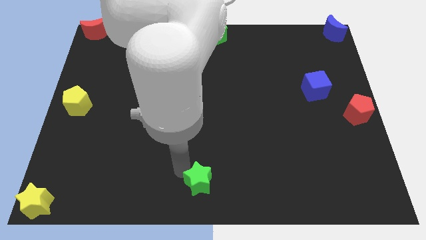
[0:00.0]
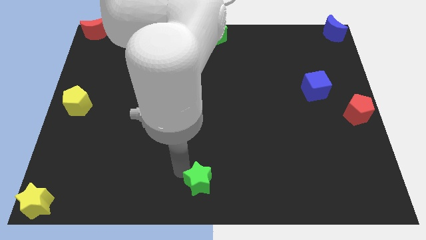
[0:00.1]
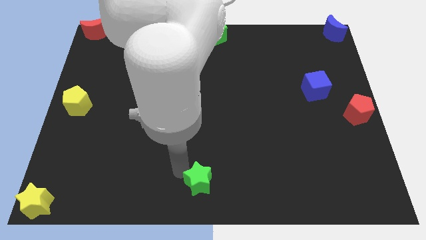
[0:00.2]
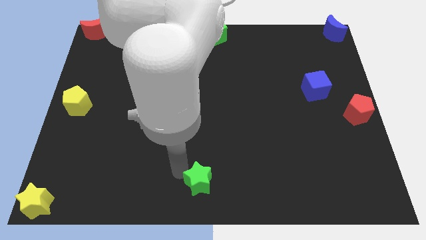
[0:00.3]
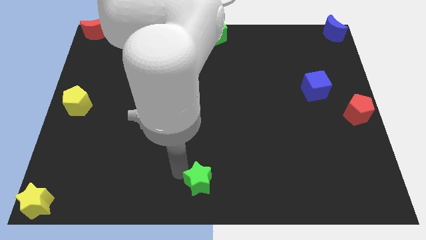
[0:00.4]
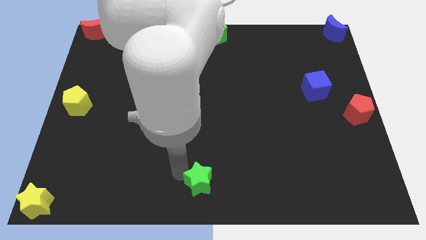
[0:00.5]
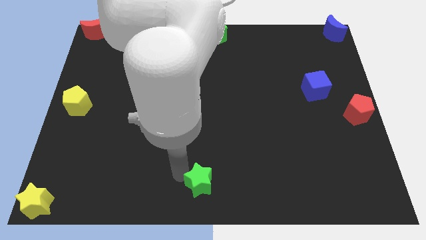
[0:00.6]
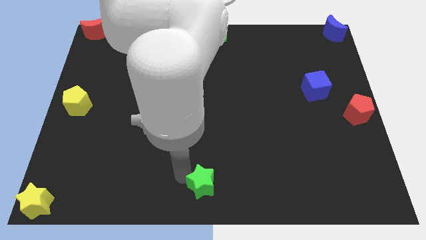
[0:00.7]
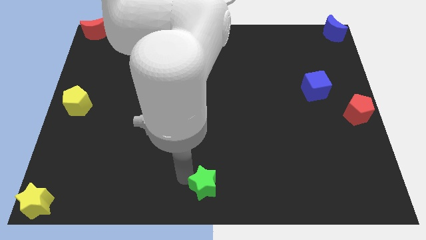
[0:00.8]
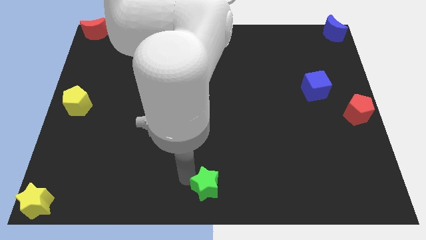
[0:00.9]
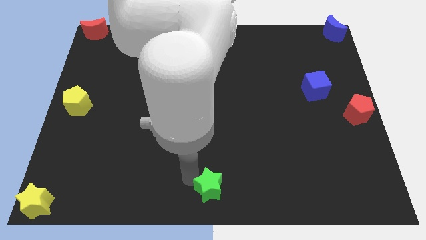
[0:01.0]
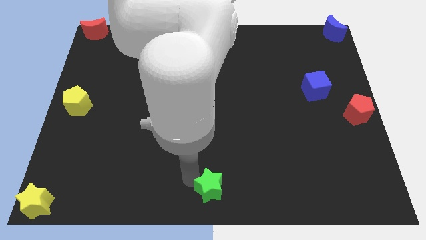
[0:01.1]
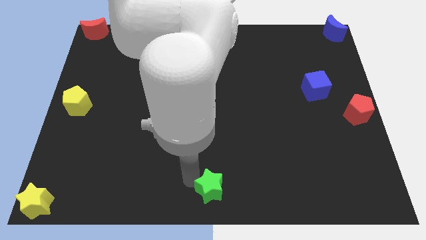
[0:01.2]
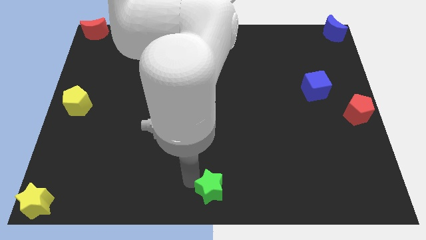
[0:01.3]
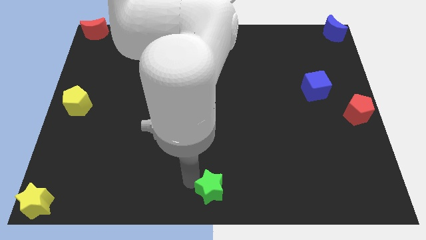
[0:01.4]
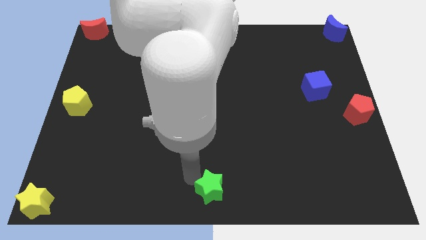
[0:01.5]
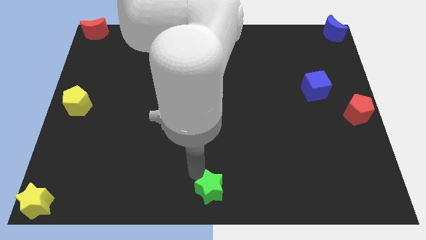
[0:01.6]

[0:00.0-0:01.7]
place the green star at the bottom center of the board

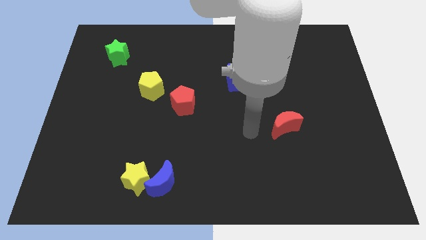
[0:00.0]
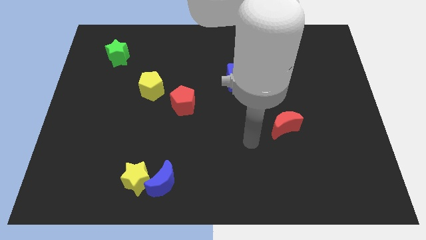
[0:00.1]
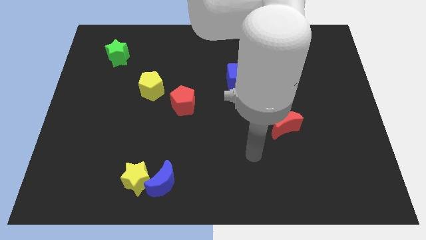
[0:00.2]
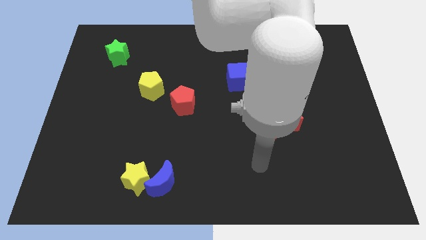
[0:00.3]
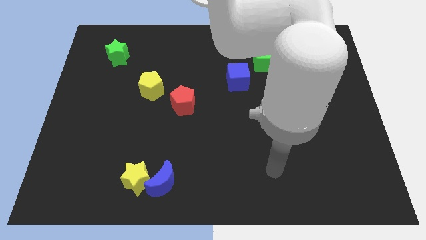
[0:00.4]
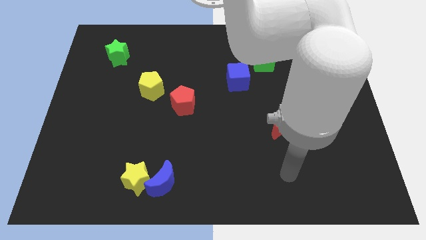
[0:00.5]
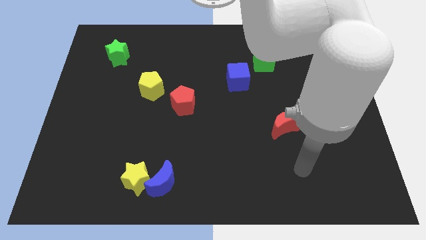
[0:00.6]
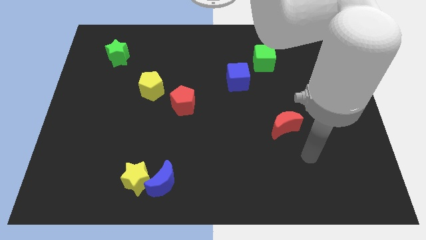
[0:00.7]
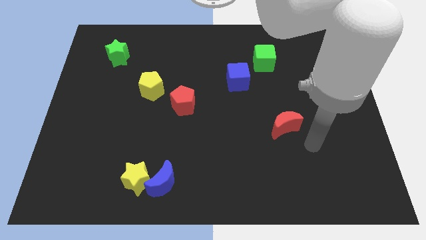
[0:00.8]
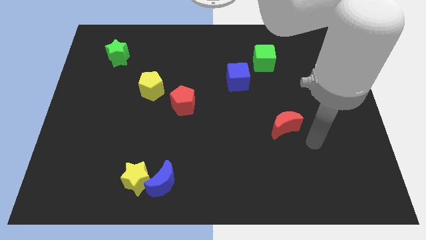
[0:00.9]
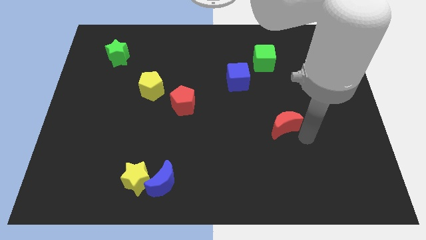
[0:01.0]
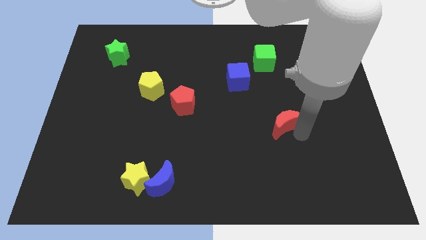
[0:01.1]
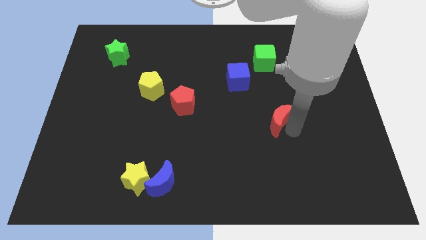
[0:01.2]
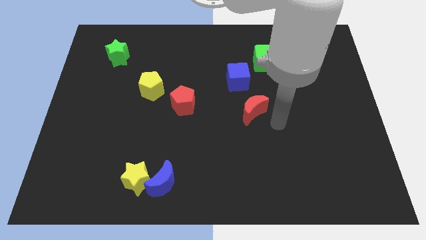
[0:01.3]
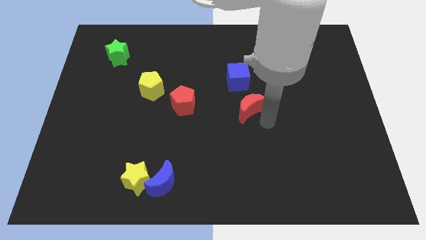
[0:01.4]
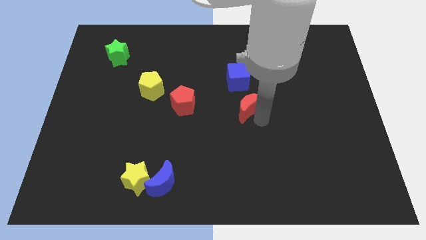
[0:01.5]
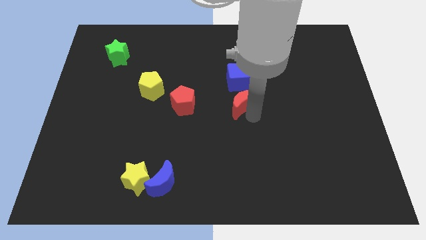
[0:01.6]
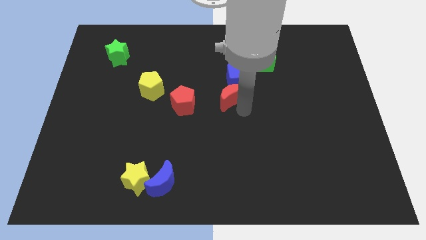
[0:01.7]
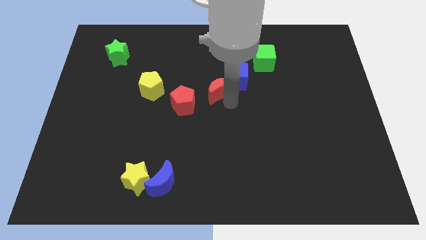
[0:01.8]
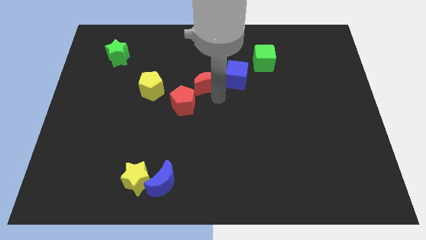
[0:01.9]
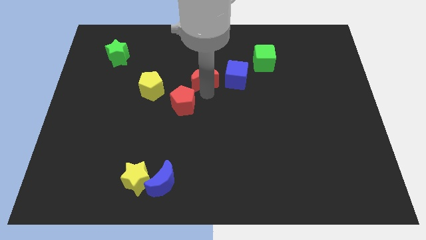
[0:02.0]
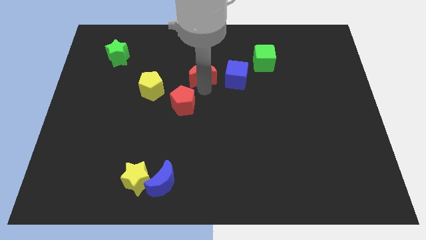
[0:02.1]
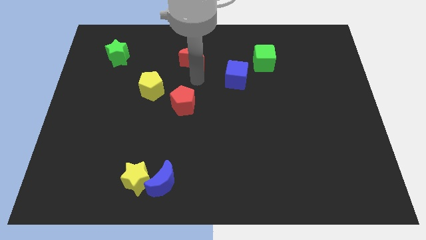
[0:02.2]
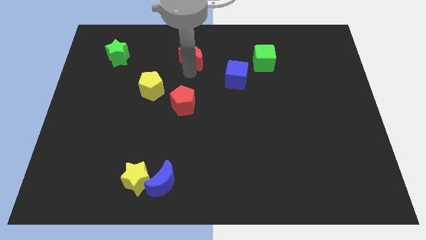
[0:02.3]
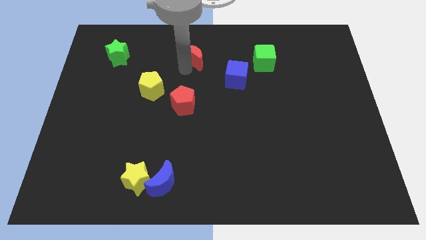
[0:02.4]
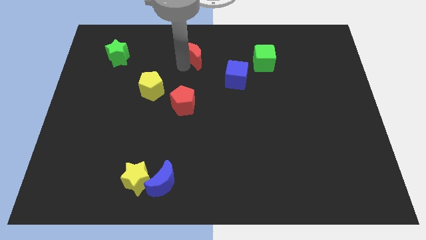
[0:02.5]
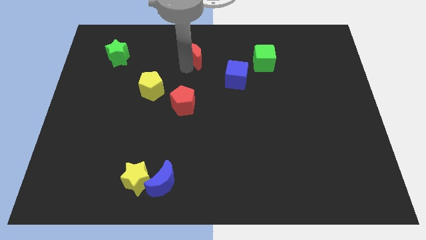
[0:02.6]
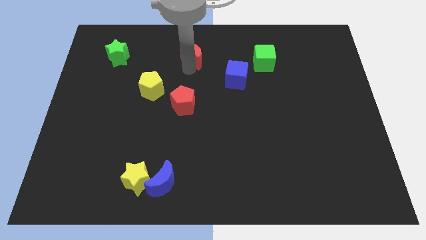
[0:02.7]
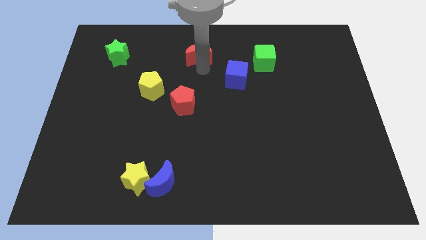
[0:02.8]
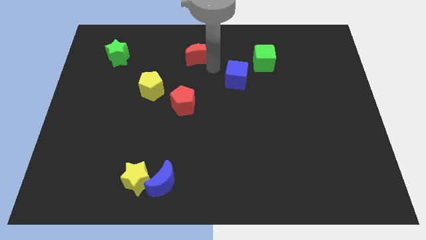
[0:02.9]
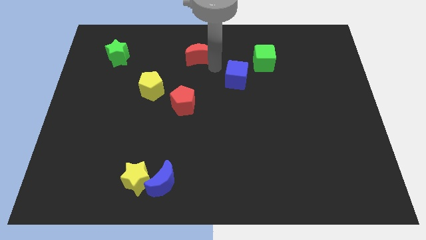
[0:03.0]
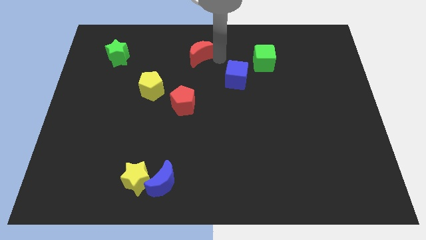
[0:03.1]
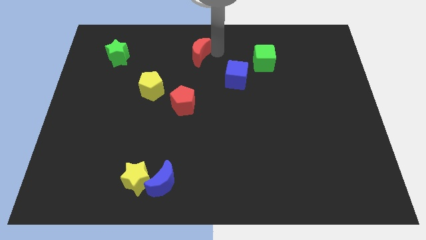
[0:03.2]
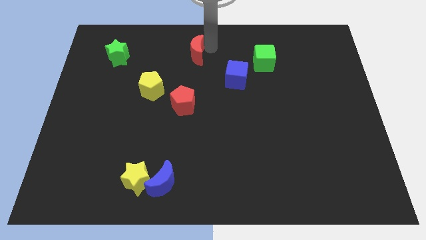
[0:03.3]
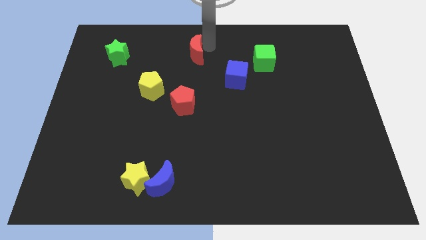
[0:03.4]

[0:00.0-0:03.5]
push the red moon diagonally to the top left of the blue cube

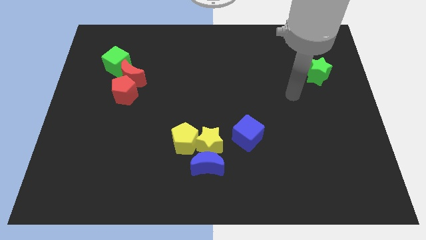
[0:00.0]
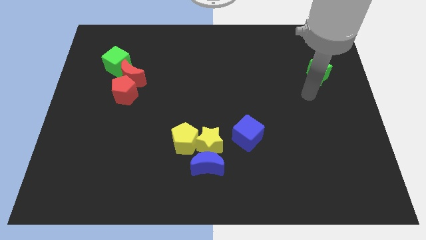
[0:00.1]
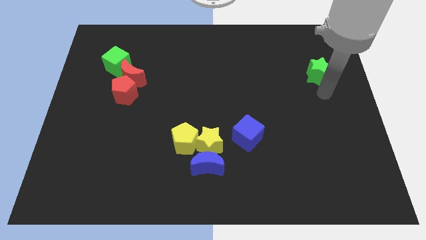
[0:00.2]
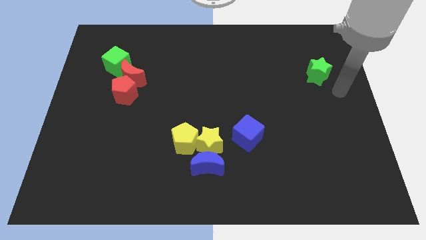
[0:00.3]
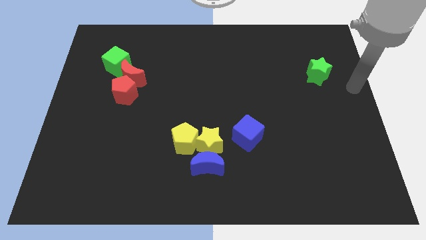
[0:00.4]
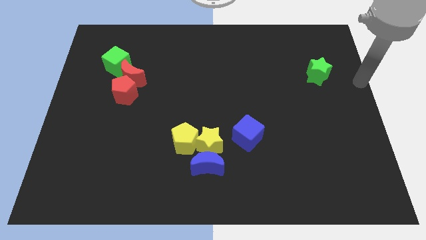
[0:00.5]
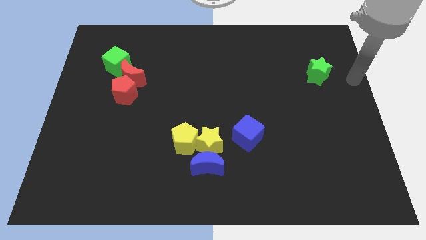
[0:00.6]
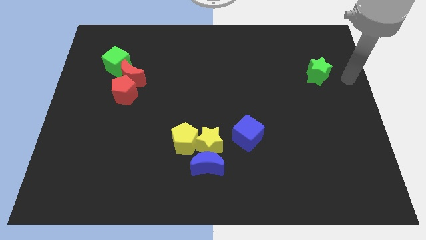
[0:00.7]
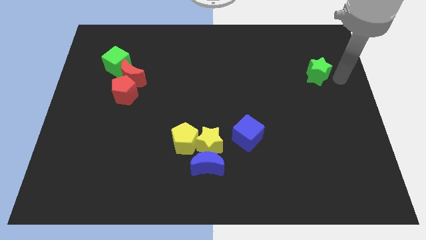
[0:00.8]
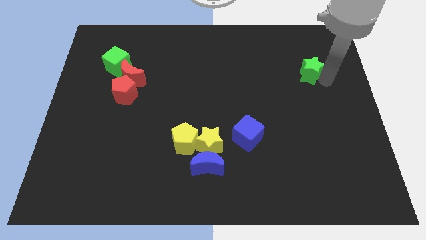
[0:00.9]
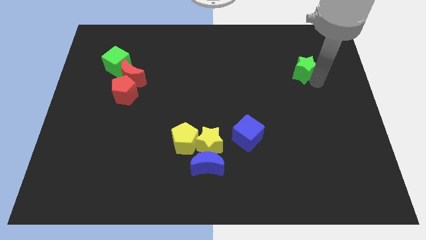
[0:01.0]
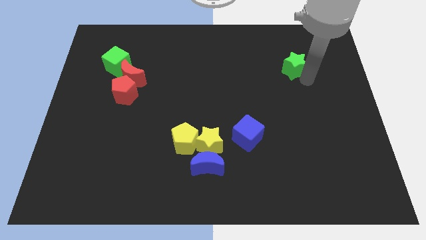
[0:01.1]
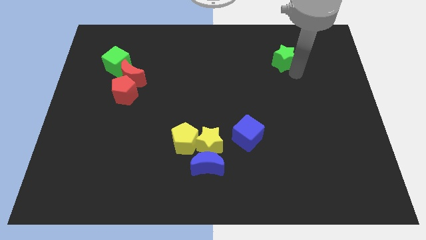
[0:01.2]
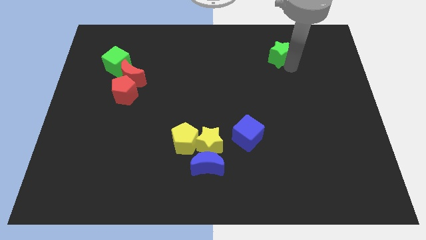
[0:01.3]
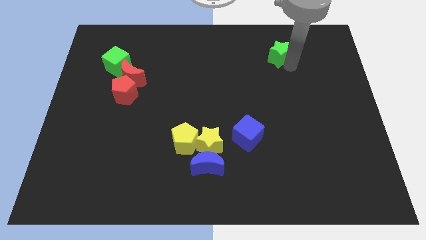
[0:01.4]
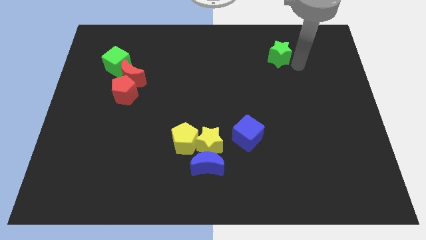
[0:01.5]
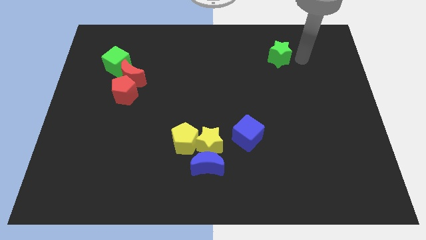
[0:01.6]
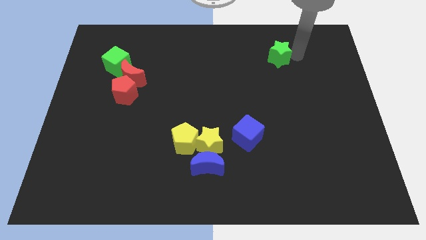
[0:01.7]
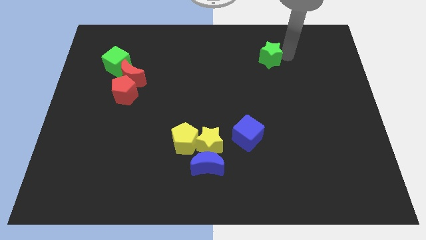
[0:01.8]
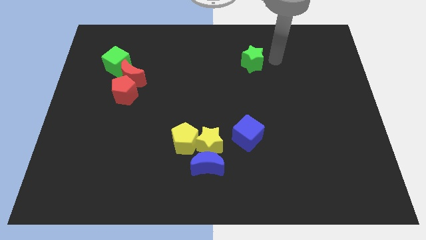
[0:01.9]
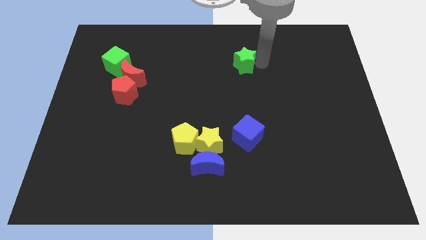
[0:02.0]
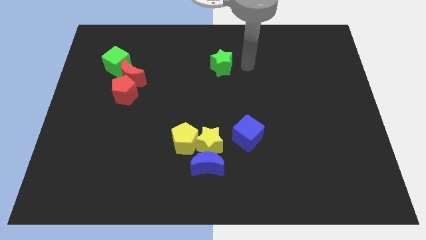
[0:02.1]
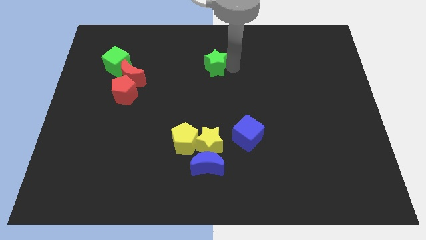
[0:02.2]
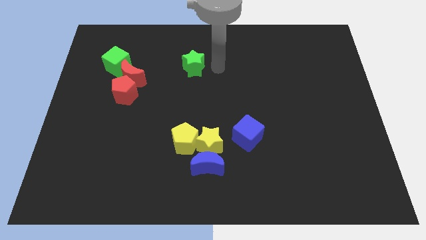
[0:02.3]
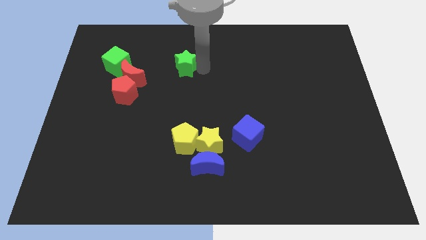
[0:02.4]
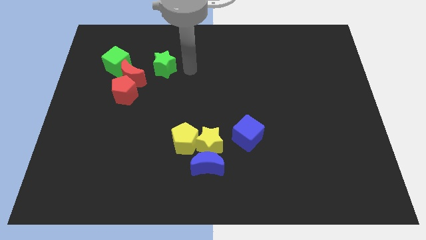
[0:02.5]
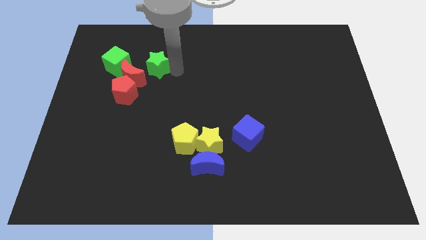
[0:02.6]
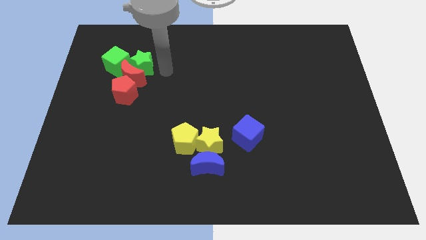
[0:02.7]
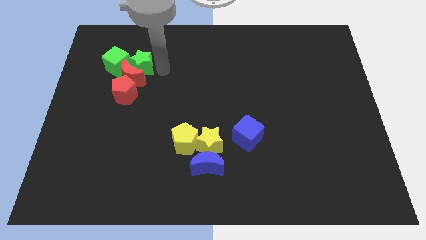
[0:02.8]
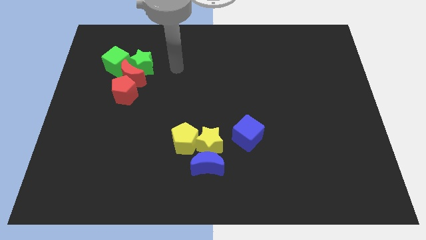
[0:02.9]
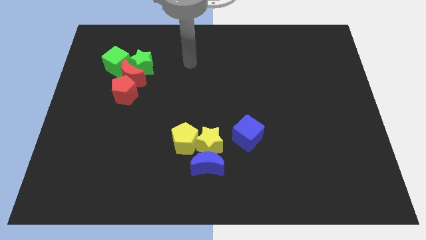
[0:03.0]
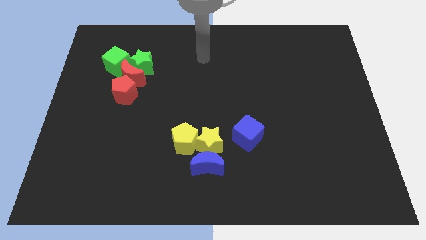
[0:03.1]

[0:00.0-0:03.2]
push the green star into the green cube and red moon

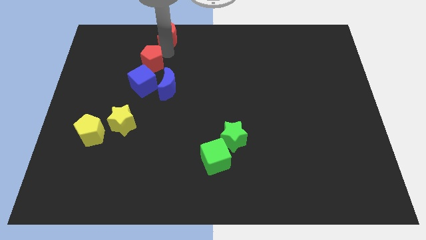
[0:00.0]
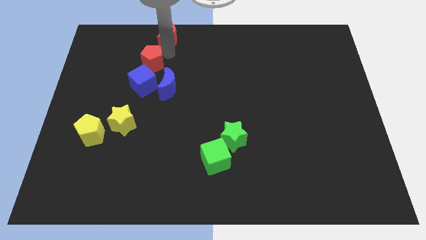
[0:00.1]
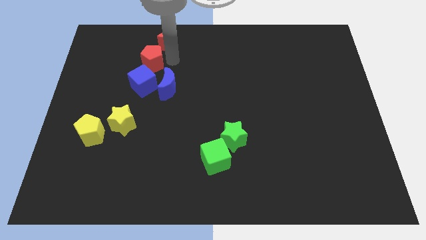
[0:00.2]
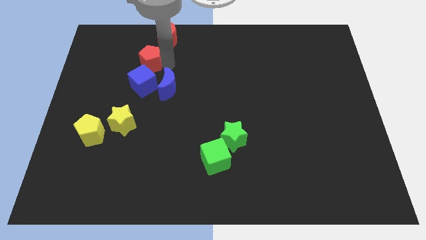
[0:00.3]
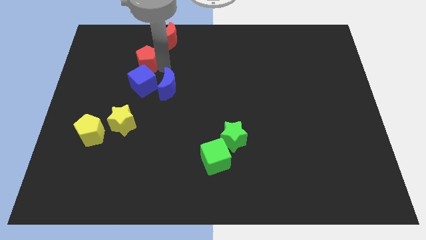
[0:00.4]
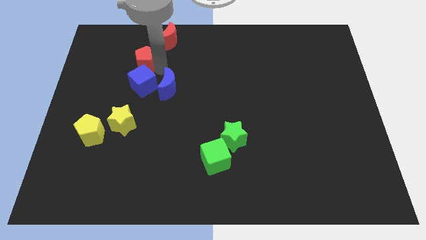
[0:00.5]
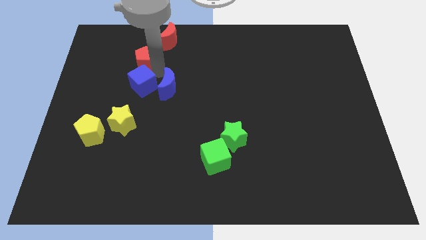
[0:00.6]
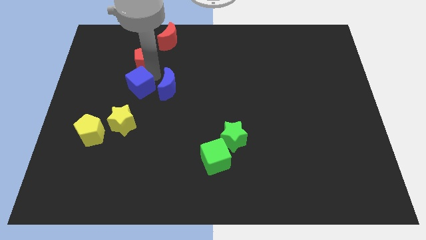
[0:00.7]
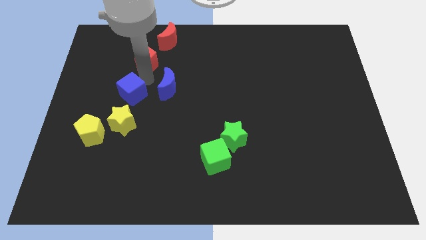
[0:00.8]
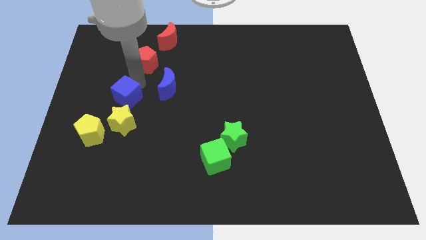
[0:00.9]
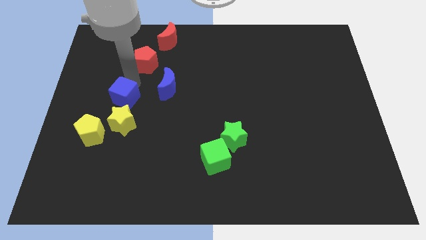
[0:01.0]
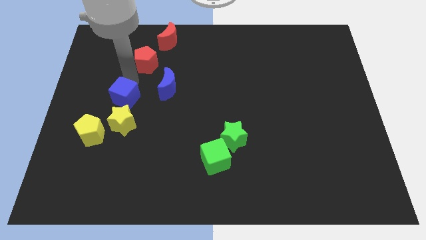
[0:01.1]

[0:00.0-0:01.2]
separate the blue cube and blue moon
